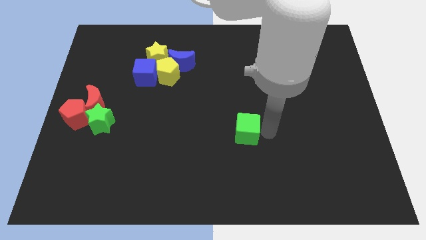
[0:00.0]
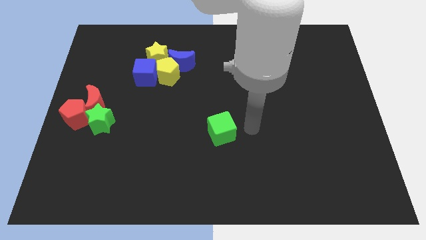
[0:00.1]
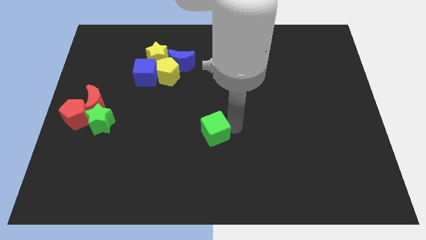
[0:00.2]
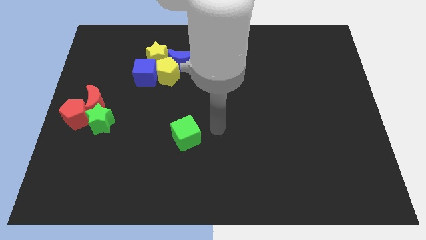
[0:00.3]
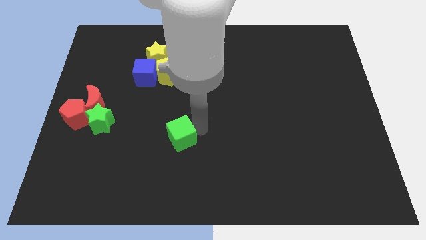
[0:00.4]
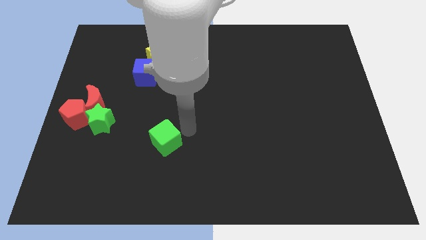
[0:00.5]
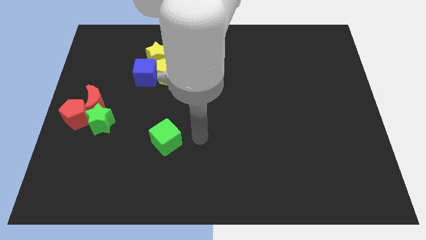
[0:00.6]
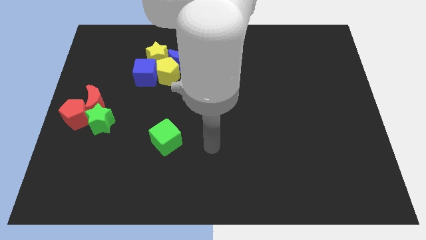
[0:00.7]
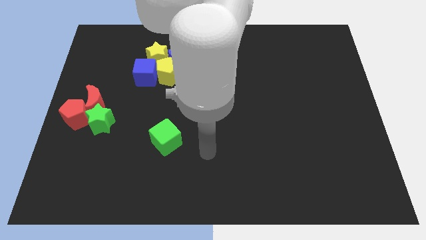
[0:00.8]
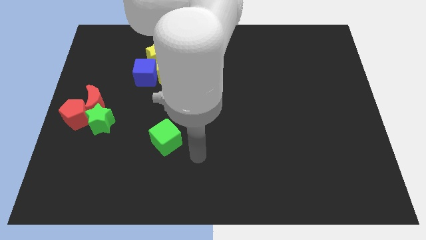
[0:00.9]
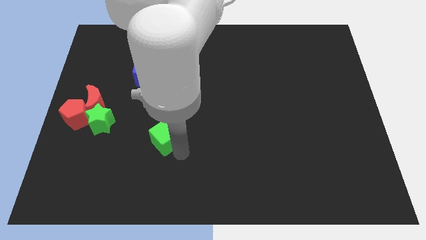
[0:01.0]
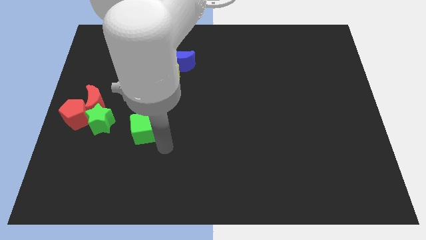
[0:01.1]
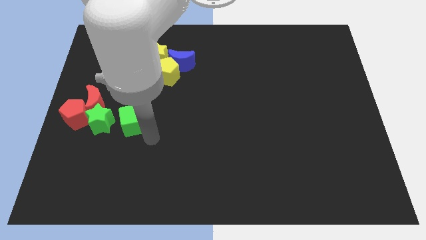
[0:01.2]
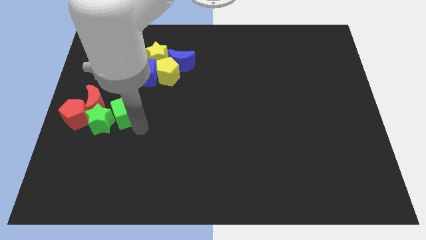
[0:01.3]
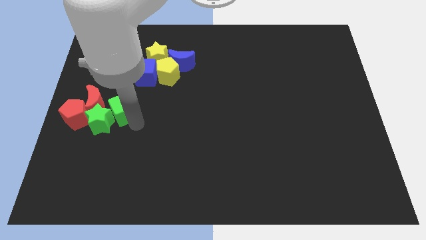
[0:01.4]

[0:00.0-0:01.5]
push the green cube into the right side of the green star

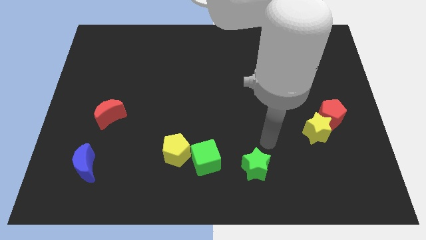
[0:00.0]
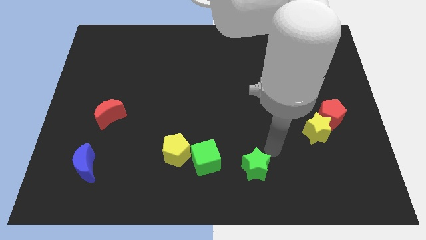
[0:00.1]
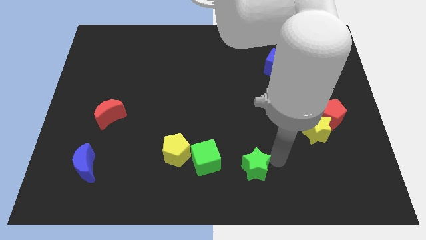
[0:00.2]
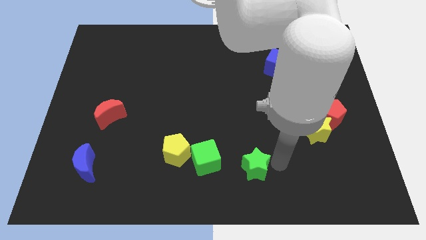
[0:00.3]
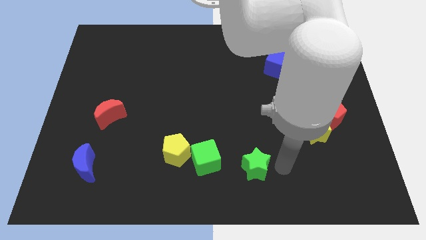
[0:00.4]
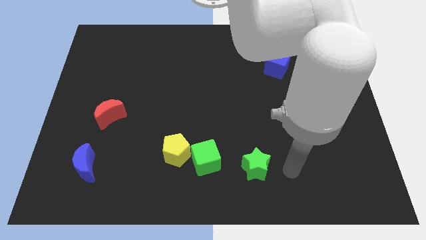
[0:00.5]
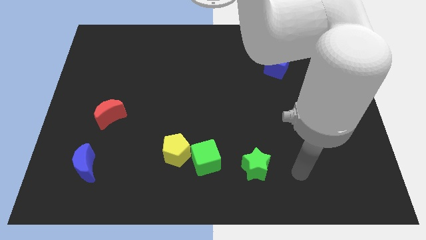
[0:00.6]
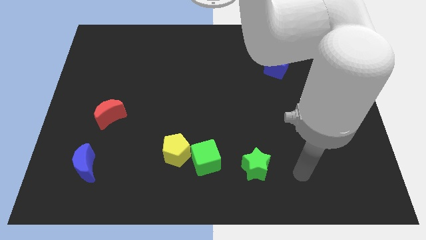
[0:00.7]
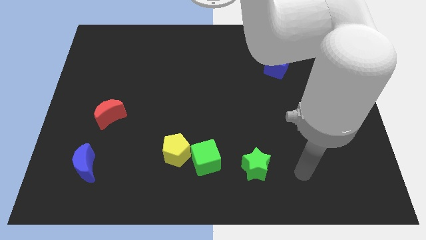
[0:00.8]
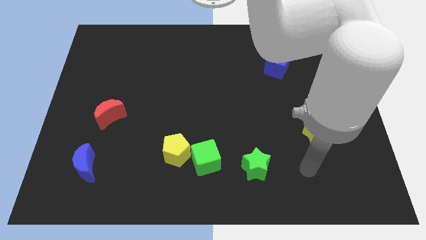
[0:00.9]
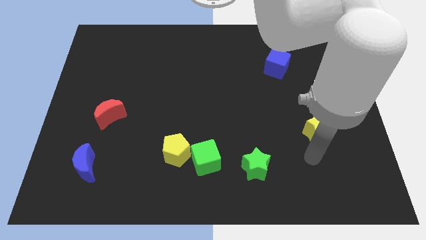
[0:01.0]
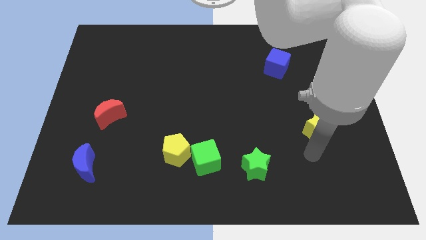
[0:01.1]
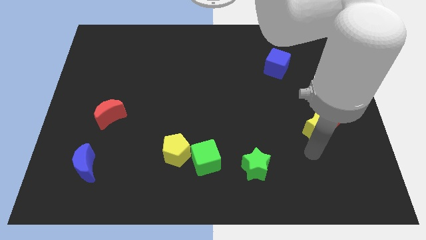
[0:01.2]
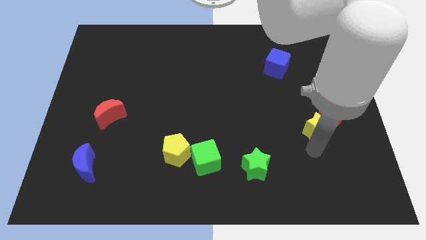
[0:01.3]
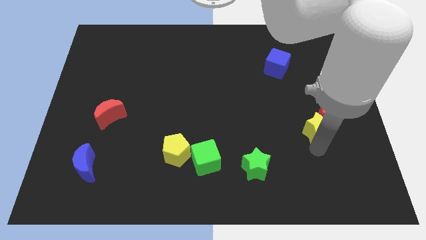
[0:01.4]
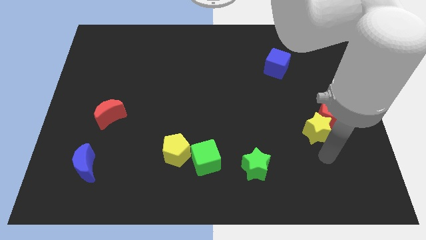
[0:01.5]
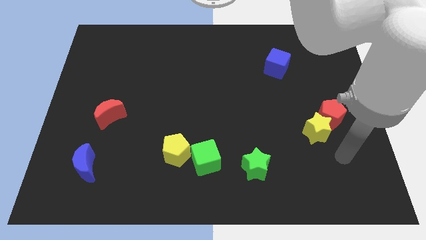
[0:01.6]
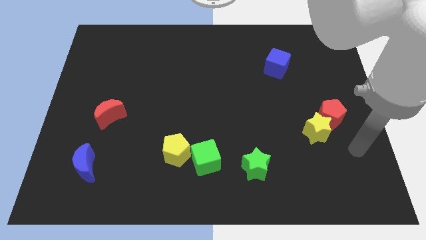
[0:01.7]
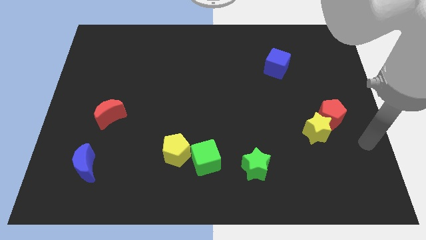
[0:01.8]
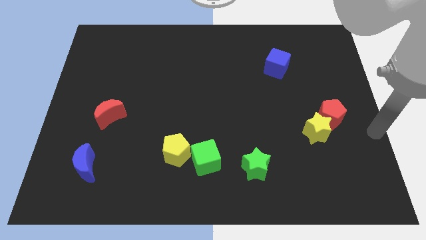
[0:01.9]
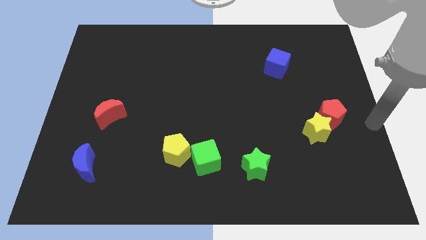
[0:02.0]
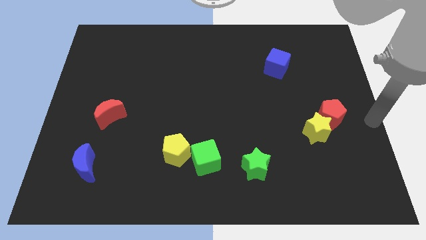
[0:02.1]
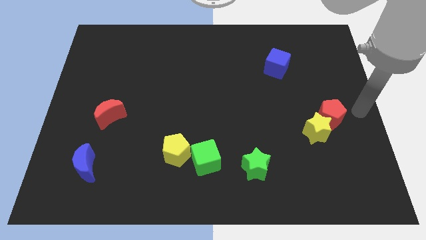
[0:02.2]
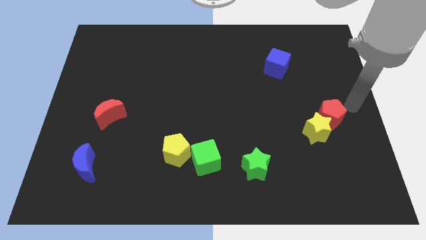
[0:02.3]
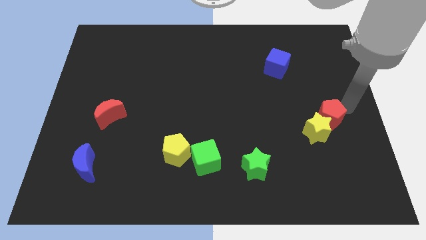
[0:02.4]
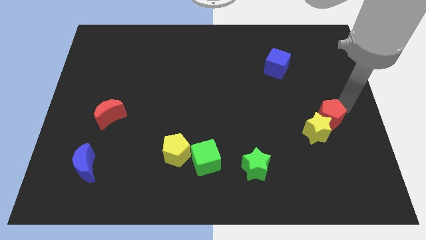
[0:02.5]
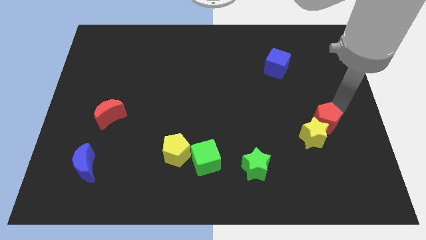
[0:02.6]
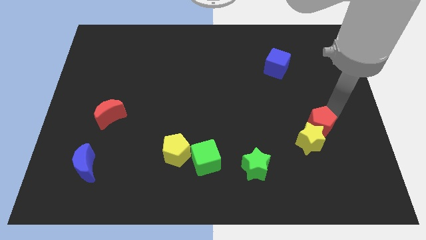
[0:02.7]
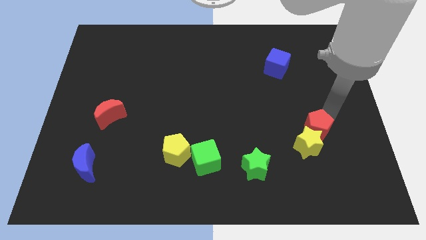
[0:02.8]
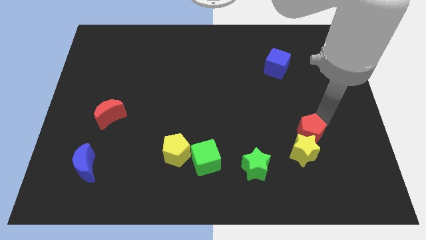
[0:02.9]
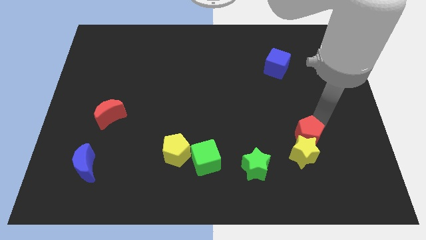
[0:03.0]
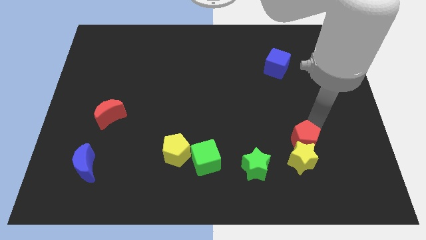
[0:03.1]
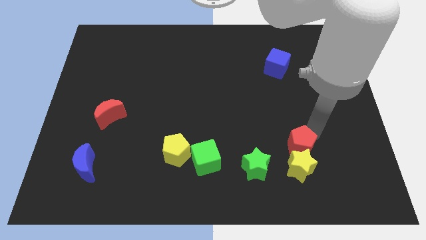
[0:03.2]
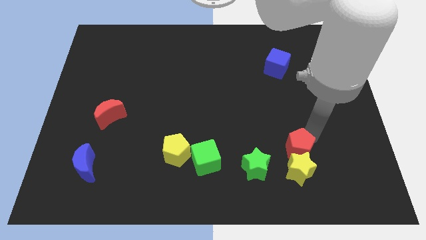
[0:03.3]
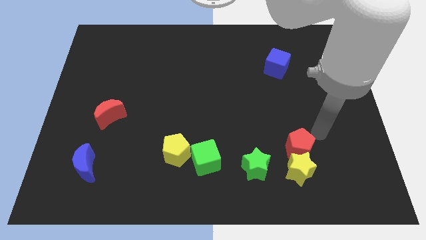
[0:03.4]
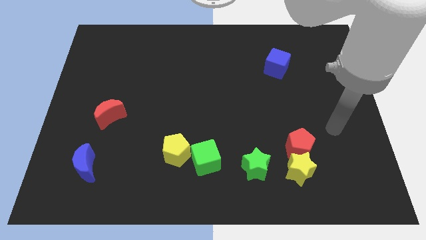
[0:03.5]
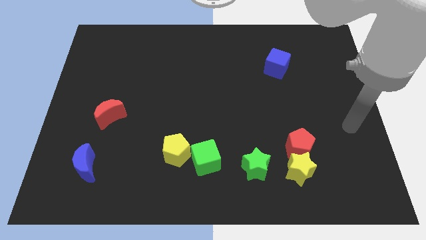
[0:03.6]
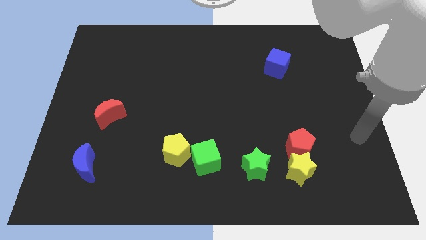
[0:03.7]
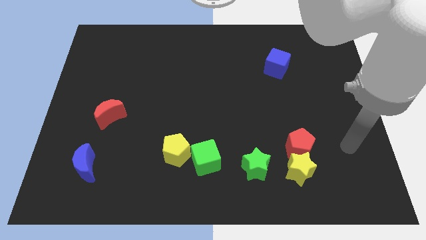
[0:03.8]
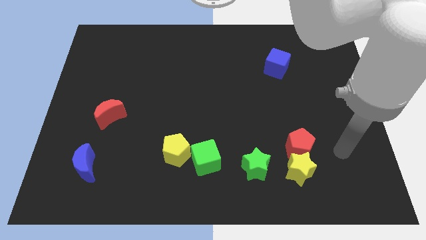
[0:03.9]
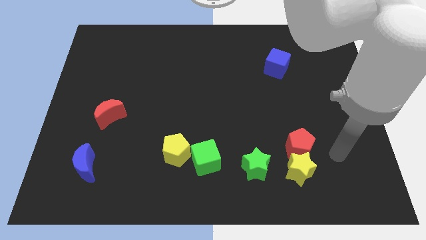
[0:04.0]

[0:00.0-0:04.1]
push the red pentagon above the yellow star

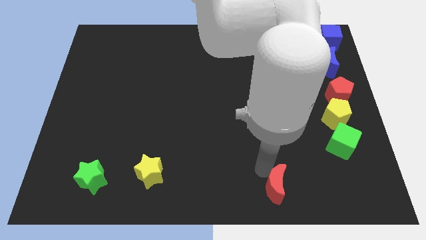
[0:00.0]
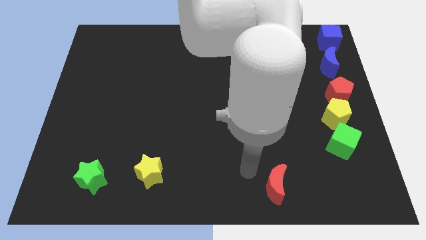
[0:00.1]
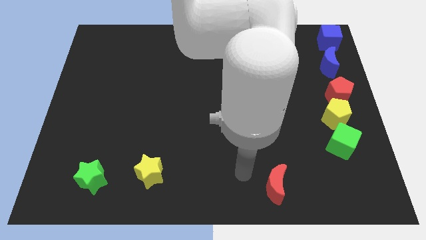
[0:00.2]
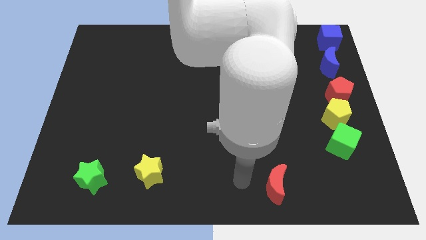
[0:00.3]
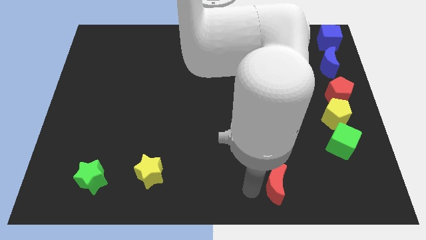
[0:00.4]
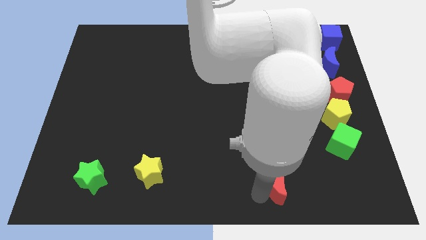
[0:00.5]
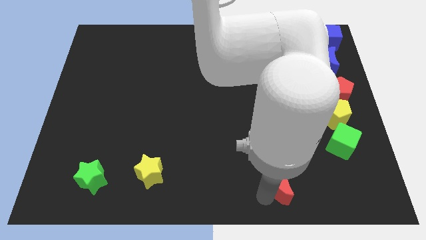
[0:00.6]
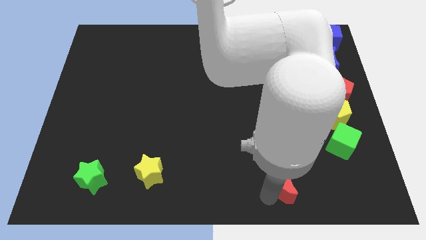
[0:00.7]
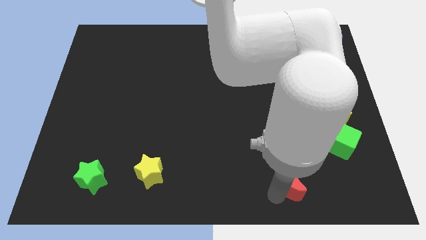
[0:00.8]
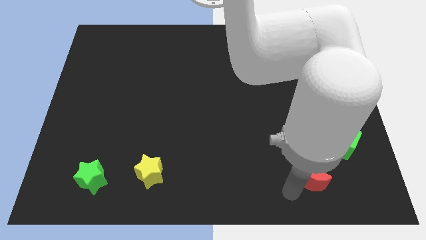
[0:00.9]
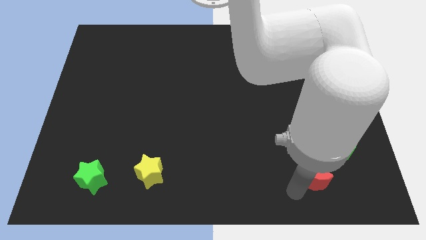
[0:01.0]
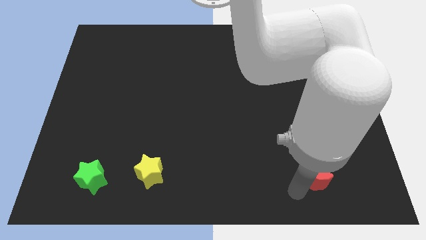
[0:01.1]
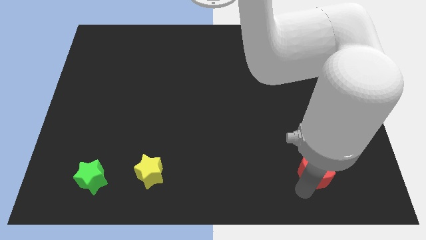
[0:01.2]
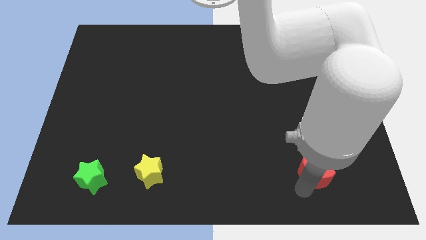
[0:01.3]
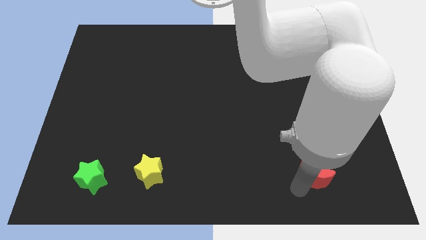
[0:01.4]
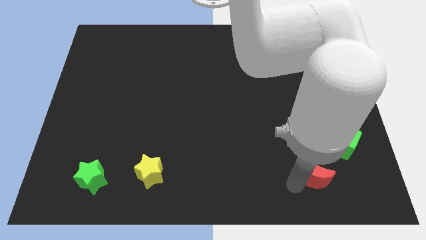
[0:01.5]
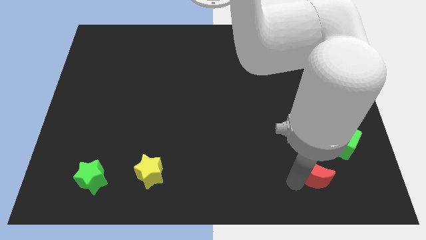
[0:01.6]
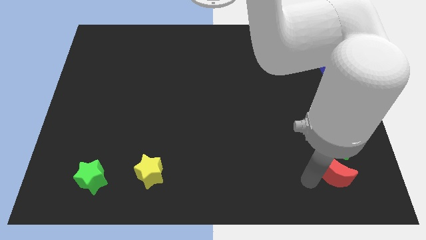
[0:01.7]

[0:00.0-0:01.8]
slide the red moon close to the green cube

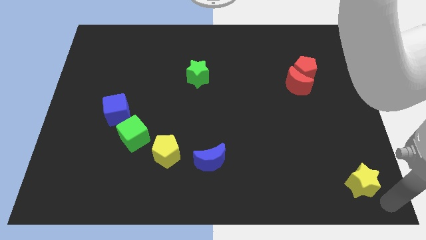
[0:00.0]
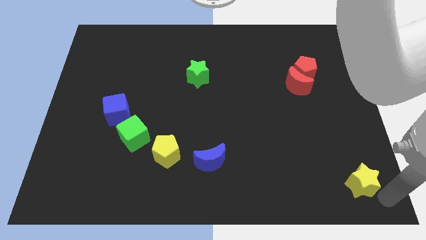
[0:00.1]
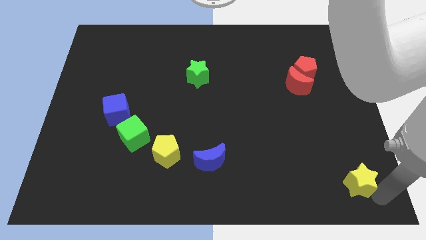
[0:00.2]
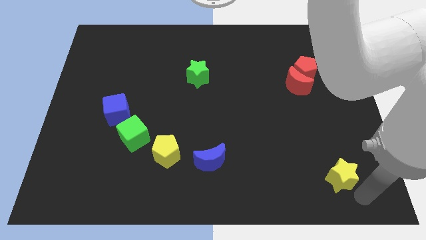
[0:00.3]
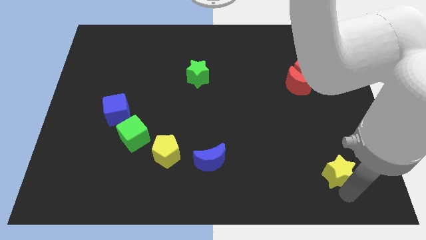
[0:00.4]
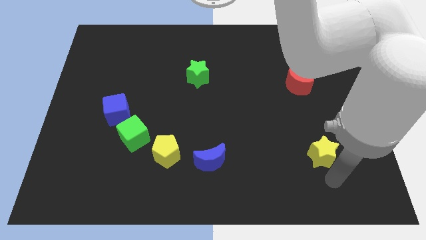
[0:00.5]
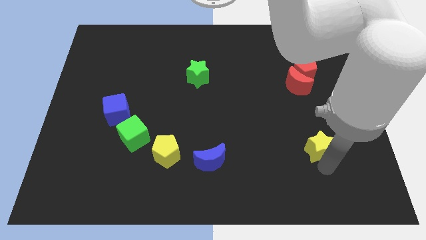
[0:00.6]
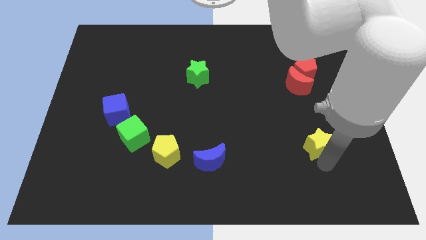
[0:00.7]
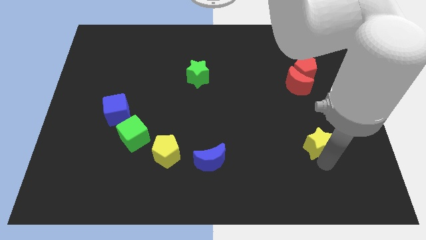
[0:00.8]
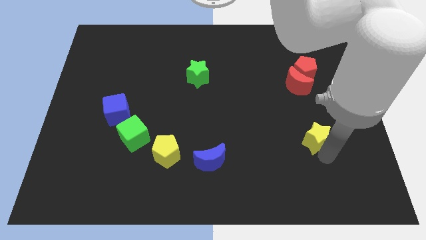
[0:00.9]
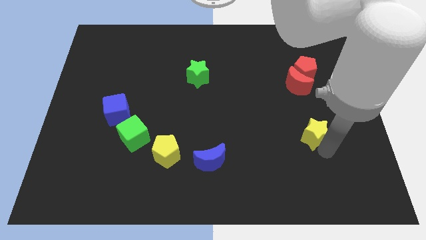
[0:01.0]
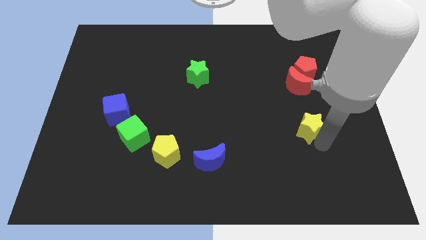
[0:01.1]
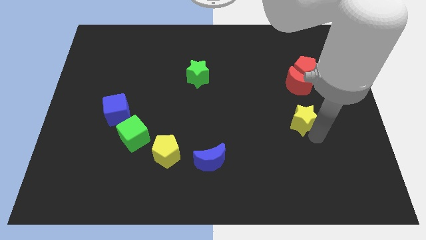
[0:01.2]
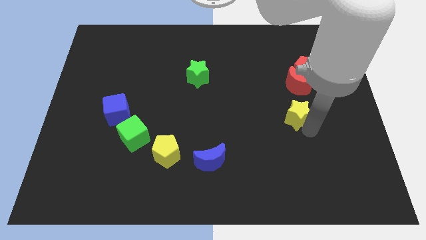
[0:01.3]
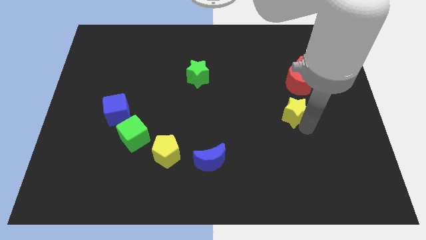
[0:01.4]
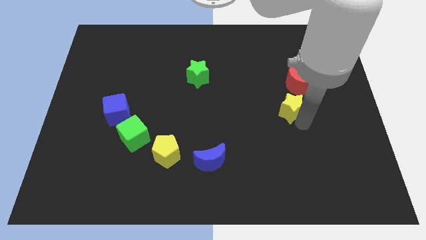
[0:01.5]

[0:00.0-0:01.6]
place yellow star to the bottom of red moon
